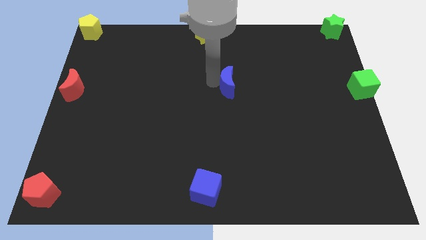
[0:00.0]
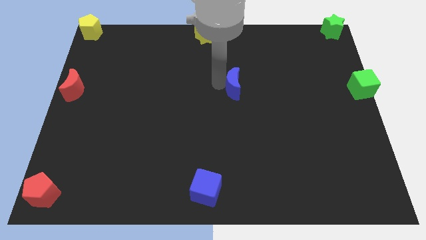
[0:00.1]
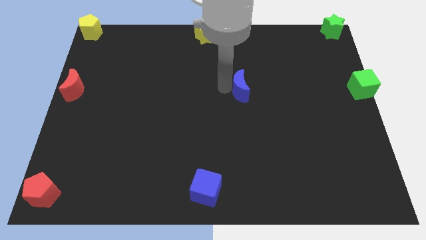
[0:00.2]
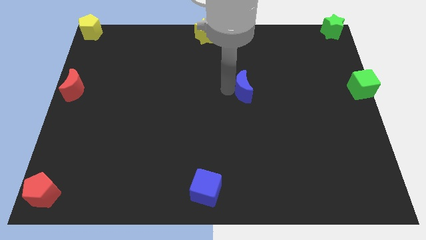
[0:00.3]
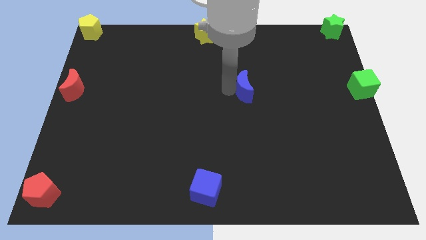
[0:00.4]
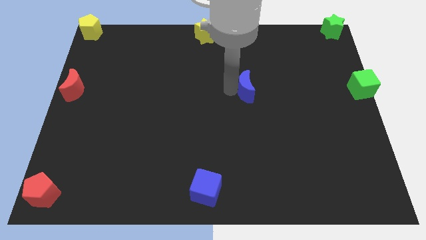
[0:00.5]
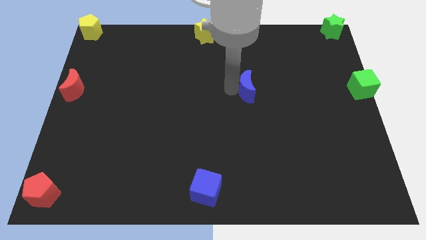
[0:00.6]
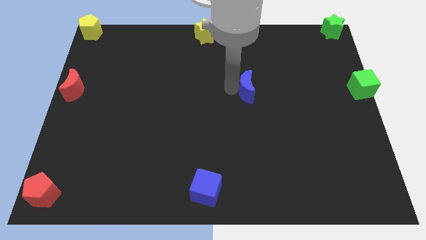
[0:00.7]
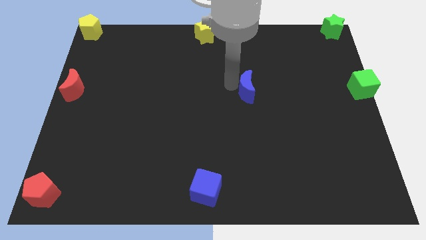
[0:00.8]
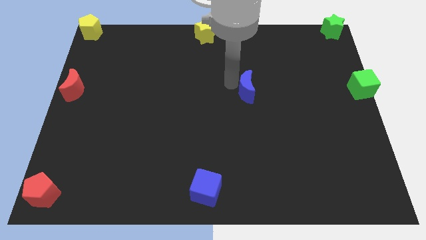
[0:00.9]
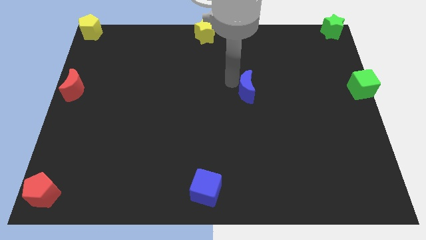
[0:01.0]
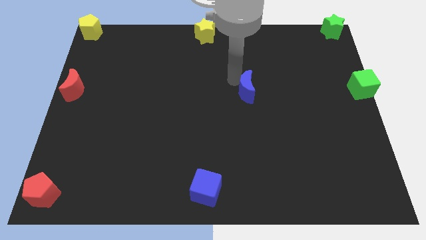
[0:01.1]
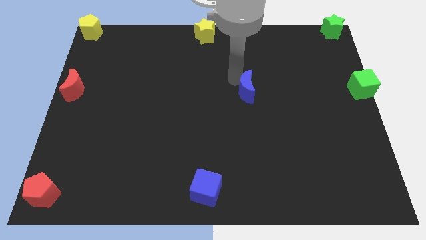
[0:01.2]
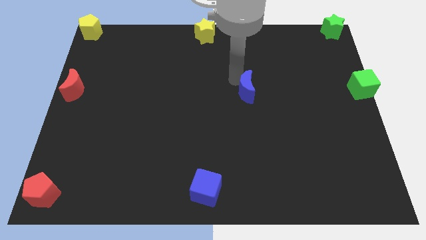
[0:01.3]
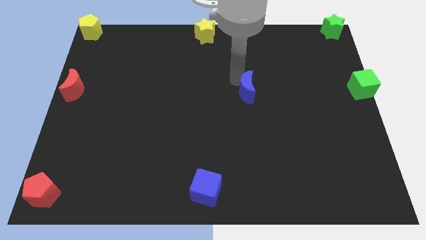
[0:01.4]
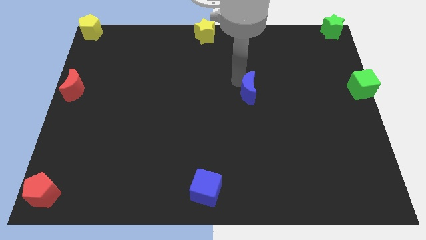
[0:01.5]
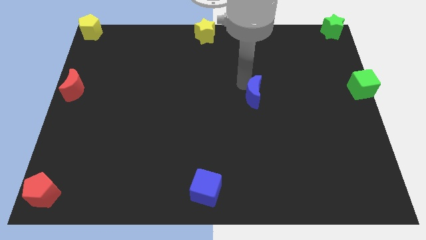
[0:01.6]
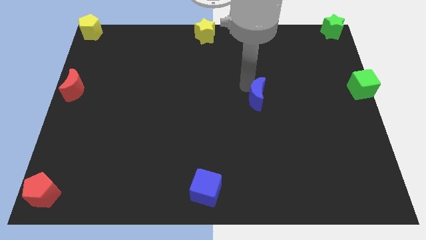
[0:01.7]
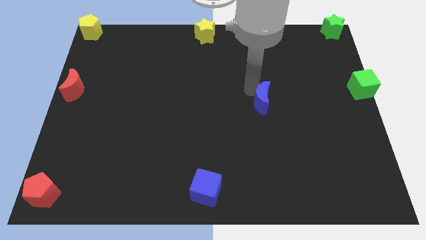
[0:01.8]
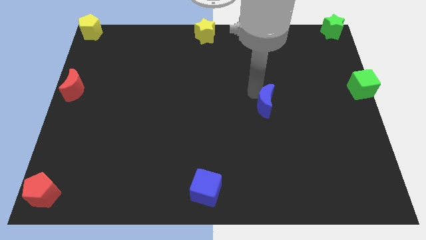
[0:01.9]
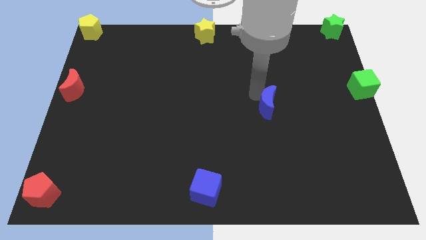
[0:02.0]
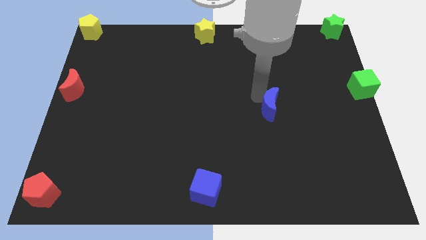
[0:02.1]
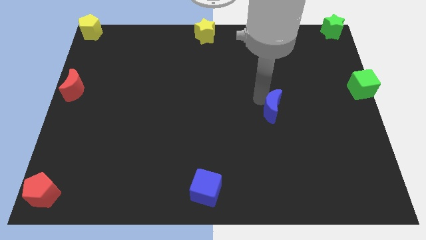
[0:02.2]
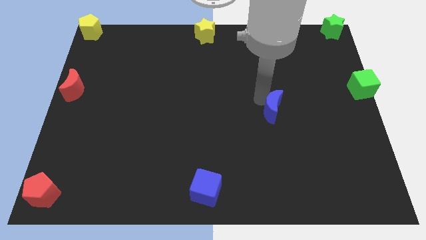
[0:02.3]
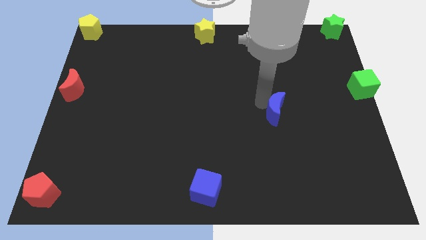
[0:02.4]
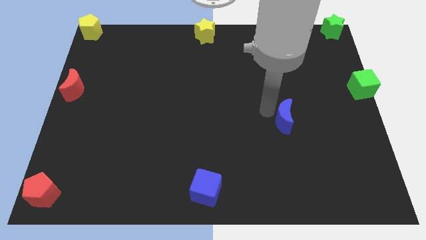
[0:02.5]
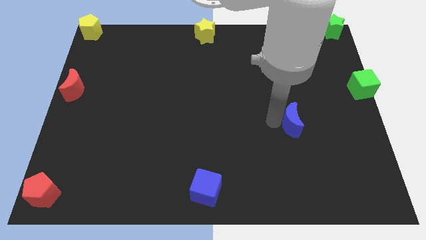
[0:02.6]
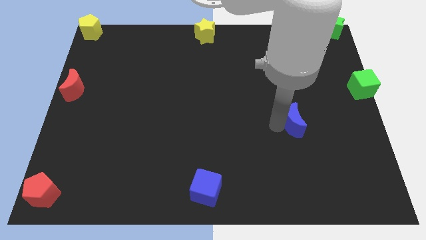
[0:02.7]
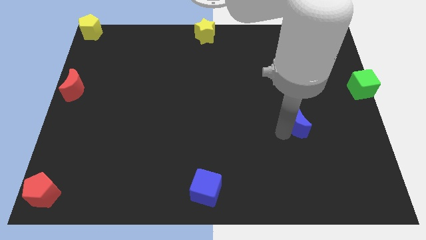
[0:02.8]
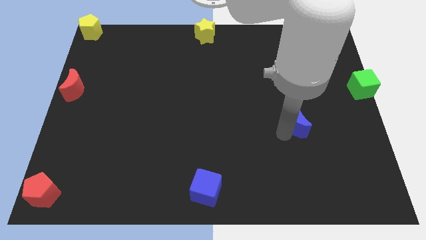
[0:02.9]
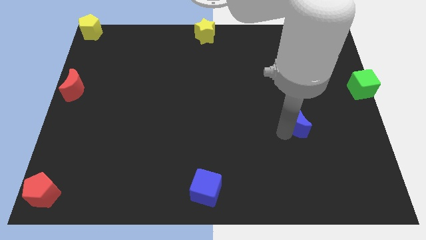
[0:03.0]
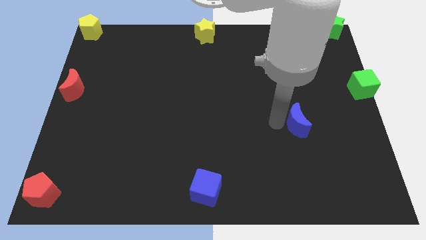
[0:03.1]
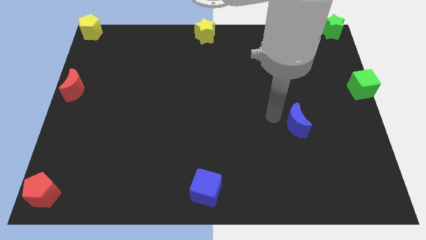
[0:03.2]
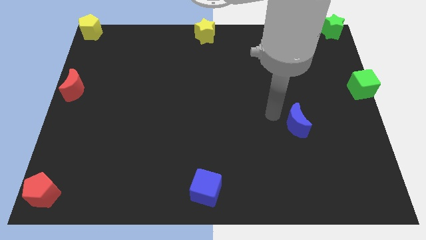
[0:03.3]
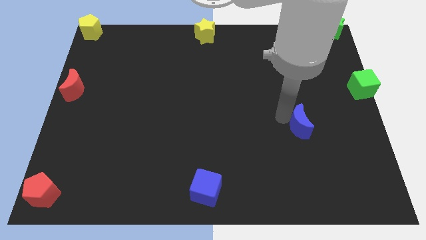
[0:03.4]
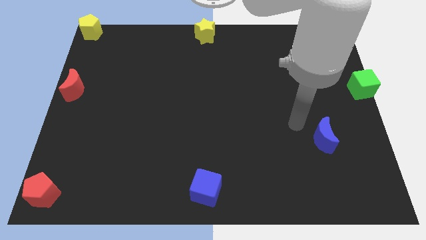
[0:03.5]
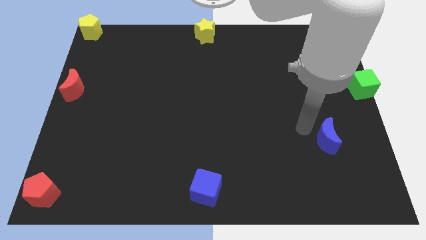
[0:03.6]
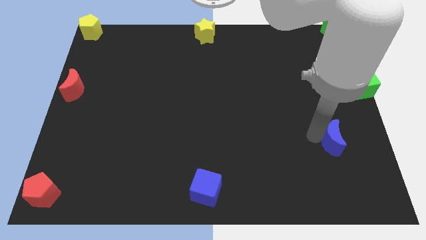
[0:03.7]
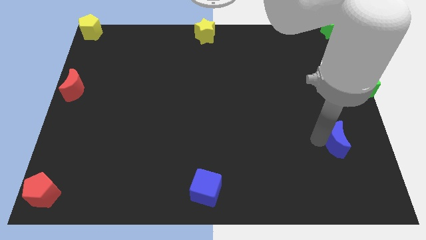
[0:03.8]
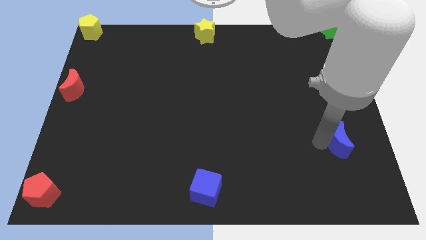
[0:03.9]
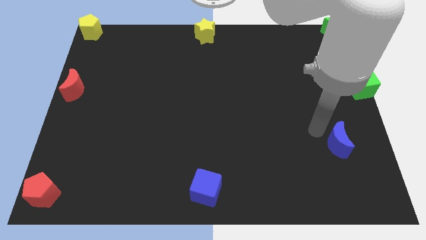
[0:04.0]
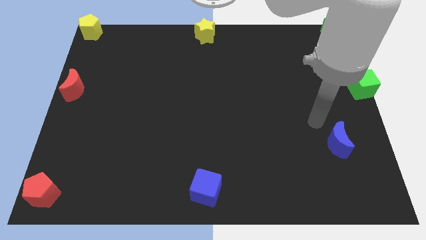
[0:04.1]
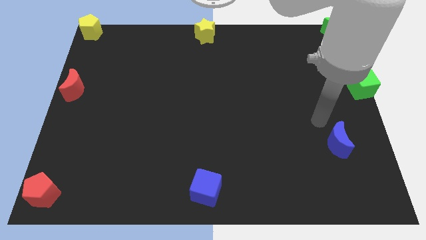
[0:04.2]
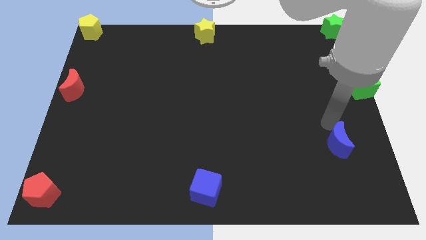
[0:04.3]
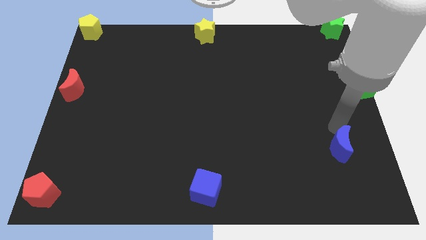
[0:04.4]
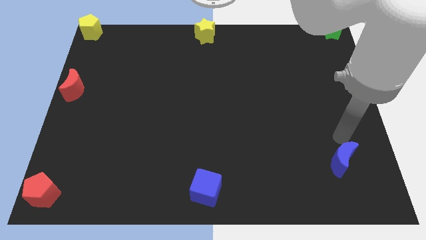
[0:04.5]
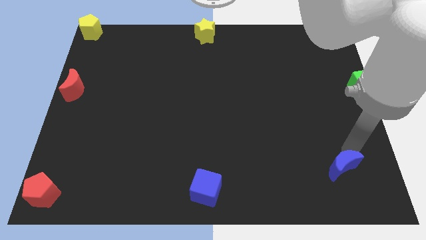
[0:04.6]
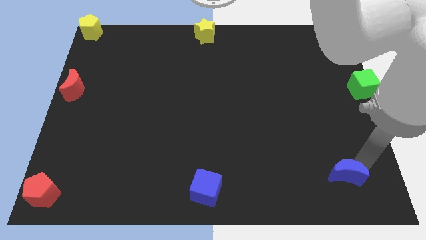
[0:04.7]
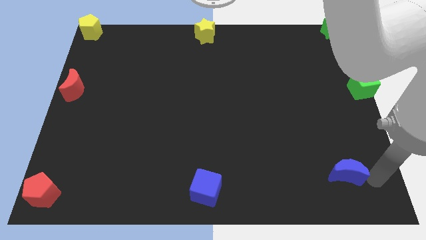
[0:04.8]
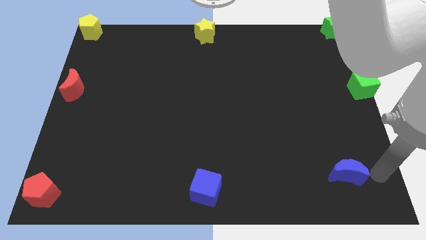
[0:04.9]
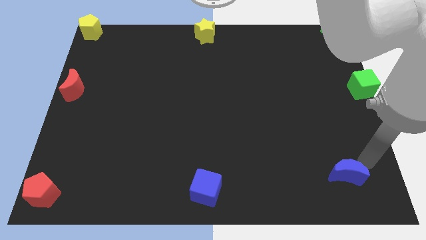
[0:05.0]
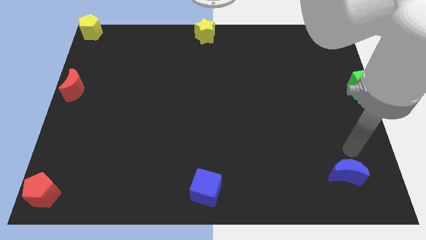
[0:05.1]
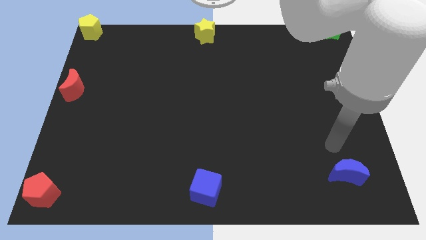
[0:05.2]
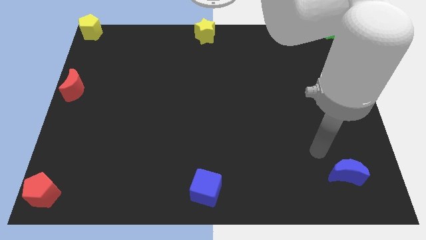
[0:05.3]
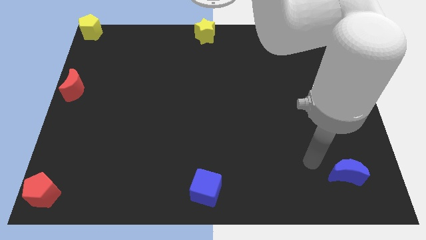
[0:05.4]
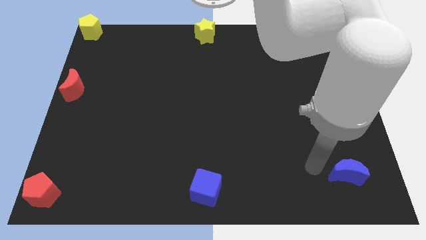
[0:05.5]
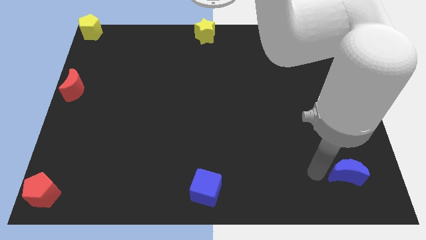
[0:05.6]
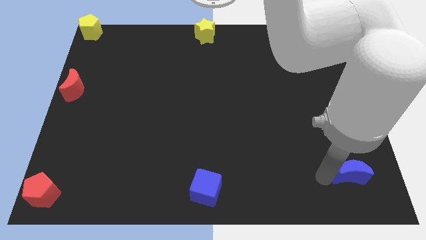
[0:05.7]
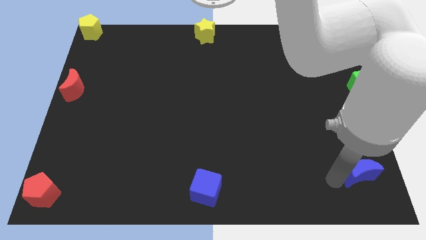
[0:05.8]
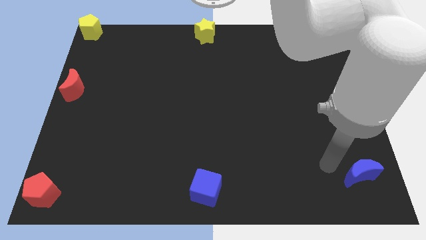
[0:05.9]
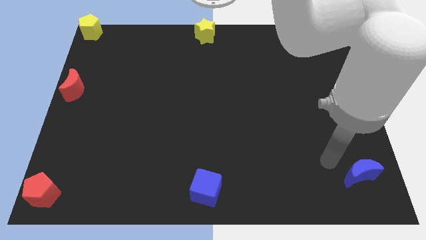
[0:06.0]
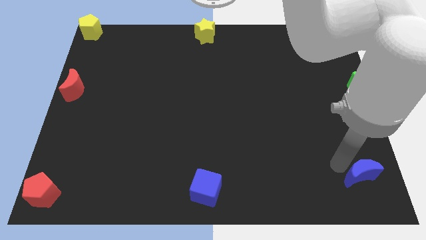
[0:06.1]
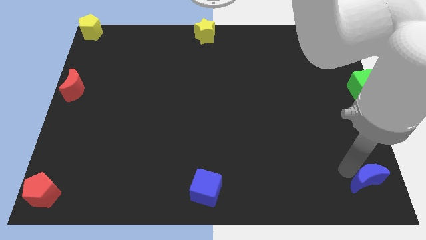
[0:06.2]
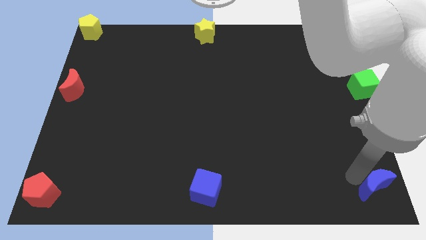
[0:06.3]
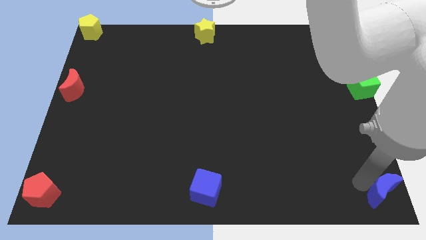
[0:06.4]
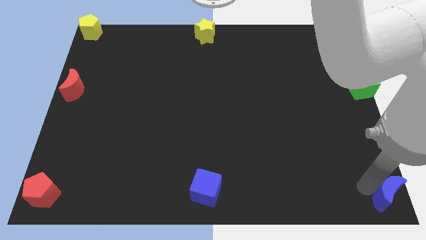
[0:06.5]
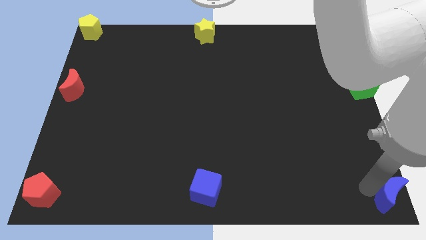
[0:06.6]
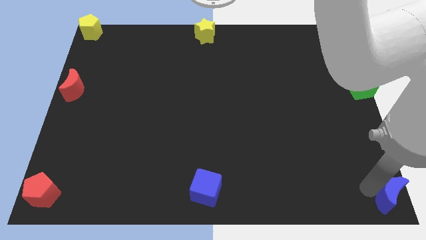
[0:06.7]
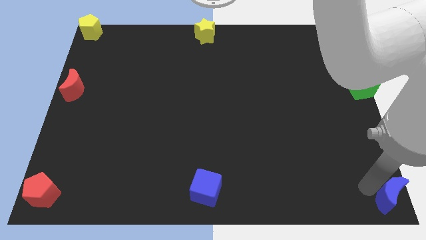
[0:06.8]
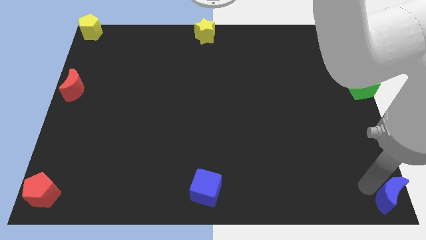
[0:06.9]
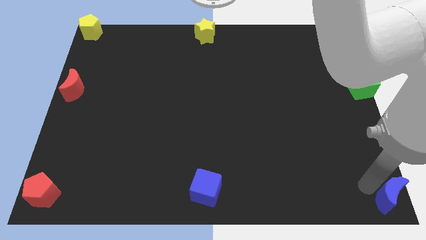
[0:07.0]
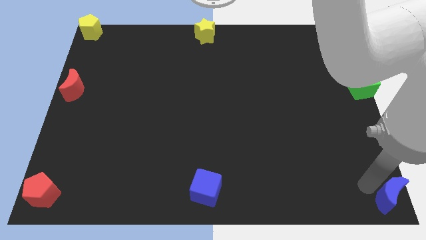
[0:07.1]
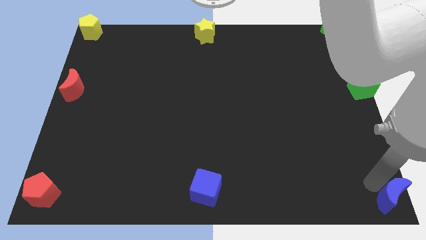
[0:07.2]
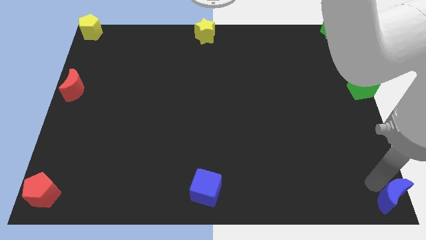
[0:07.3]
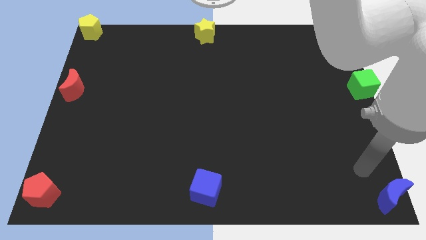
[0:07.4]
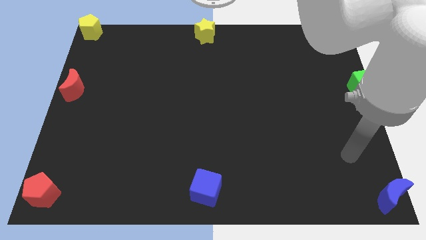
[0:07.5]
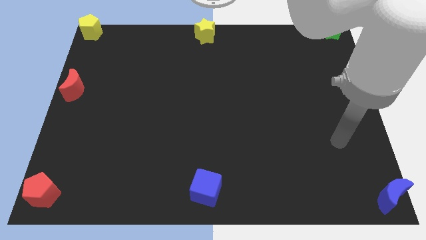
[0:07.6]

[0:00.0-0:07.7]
push the blue crescent to the bottom right corner of the board

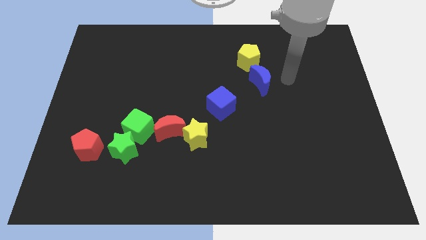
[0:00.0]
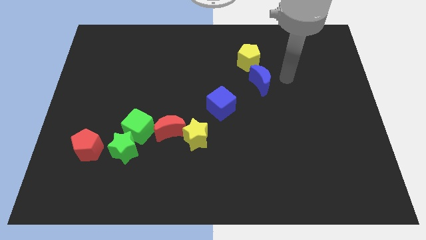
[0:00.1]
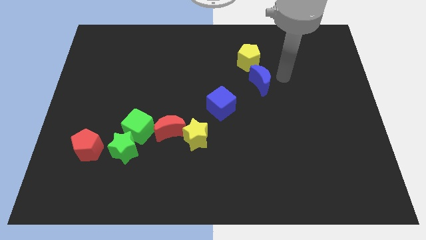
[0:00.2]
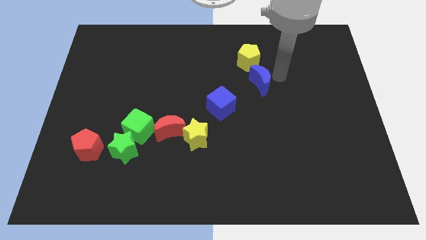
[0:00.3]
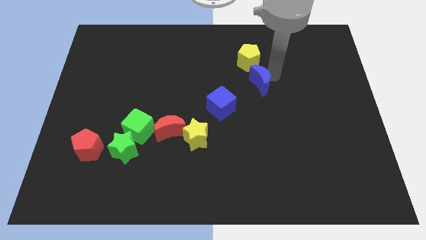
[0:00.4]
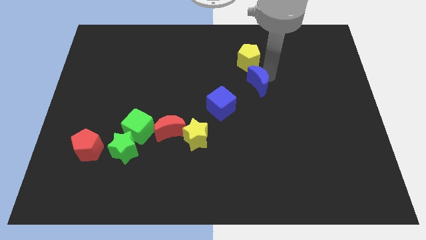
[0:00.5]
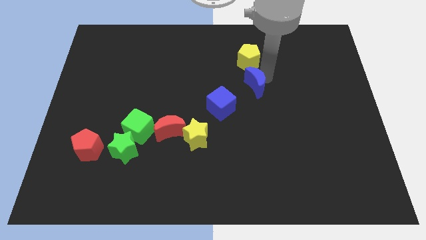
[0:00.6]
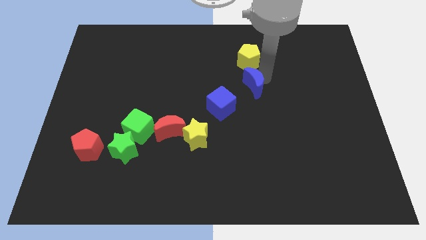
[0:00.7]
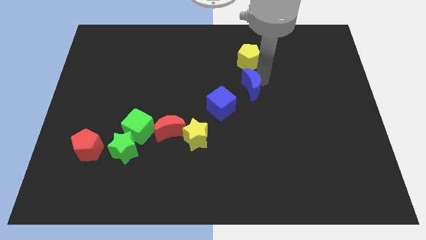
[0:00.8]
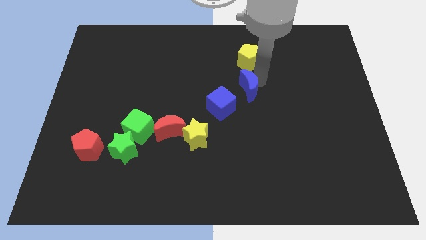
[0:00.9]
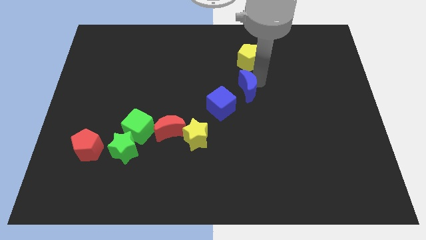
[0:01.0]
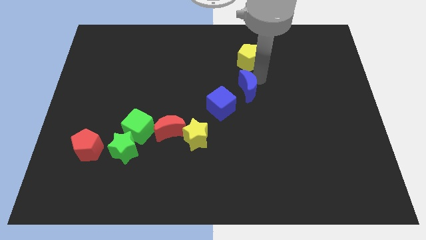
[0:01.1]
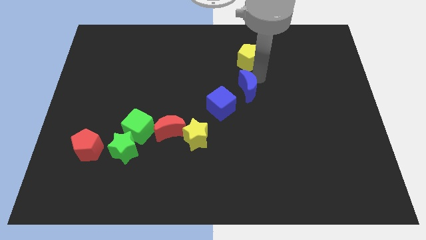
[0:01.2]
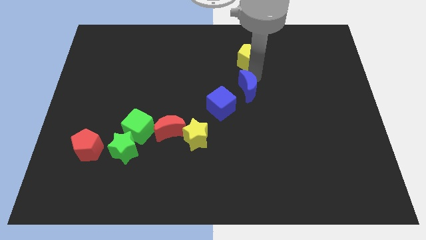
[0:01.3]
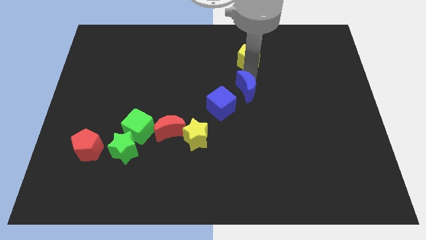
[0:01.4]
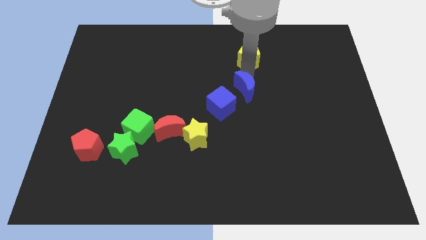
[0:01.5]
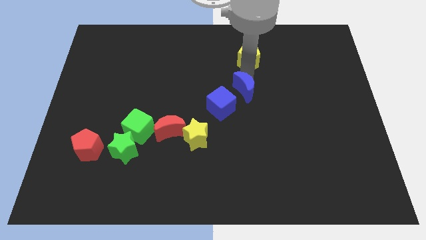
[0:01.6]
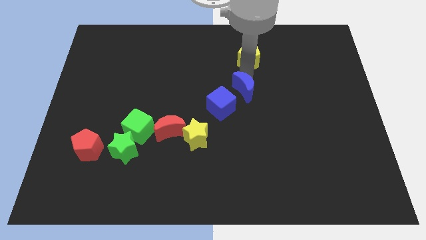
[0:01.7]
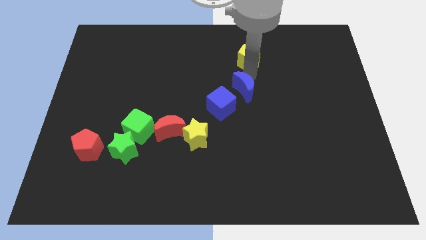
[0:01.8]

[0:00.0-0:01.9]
separate the blue crescent and the yellow pentagon
